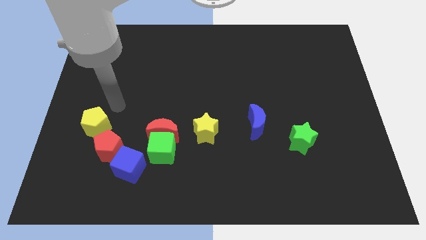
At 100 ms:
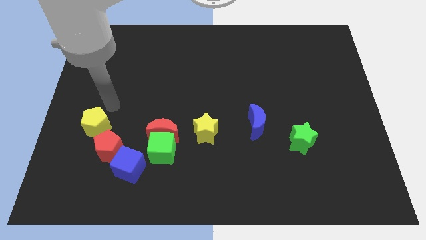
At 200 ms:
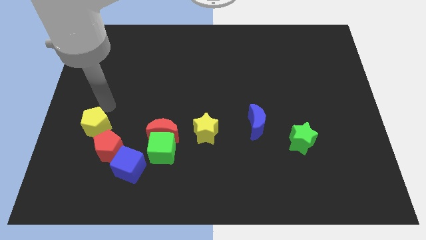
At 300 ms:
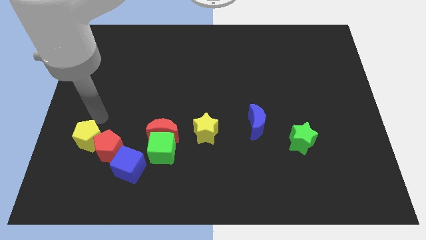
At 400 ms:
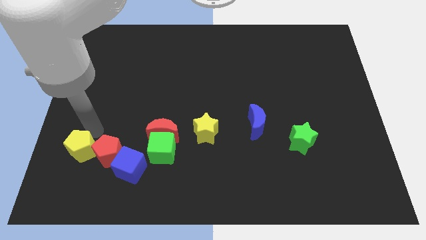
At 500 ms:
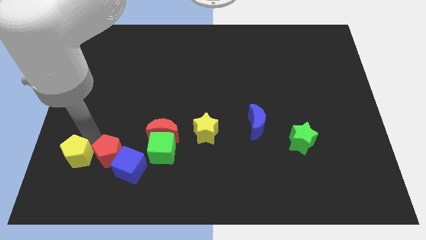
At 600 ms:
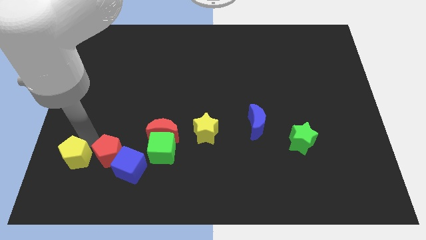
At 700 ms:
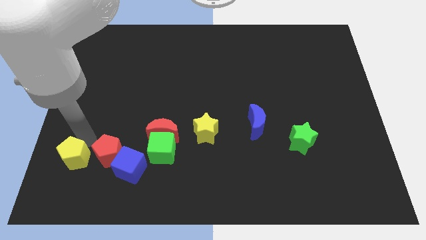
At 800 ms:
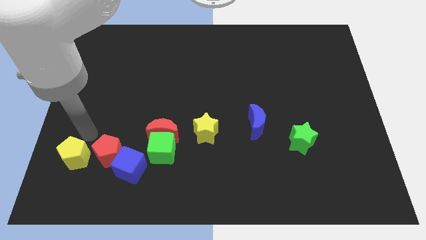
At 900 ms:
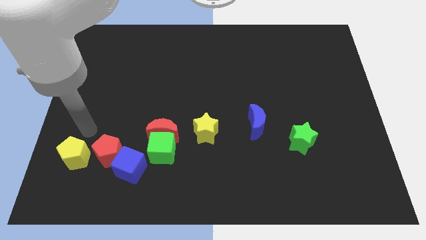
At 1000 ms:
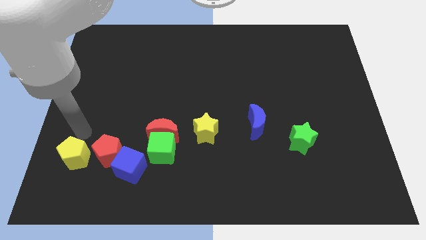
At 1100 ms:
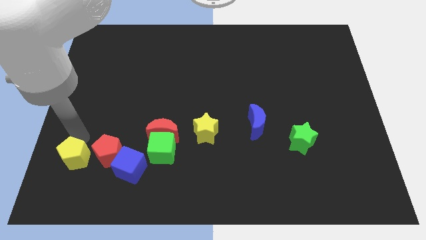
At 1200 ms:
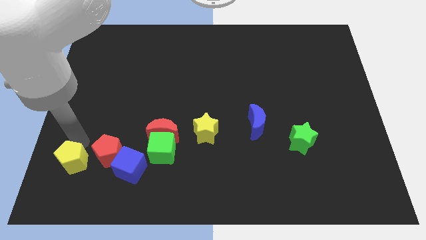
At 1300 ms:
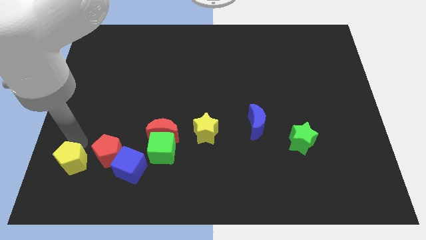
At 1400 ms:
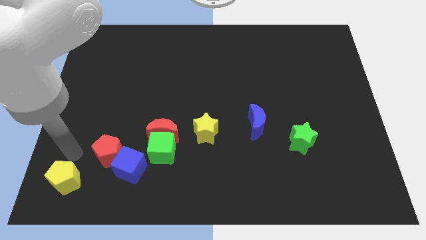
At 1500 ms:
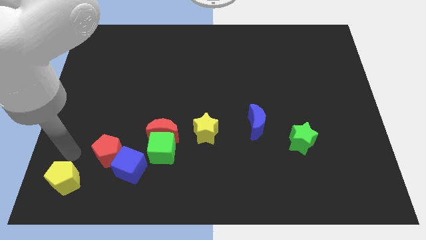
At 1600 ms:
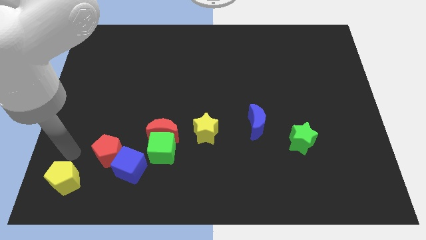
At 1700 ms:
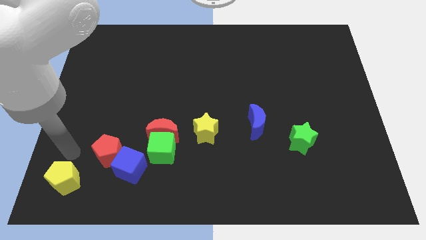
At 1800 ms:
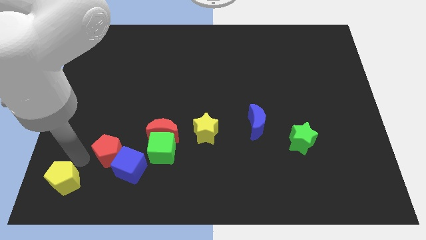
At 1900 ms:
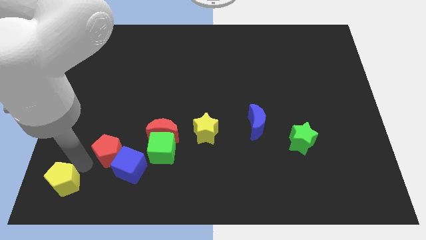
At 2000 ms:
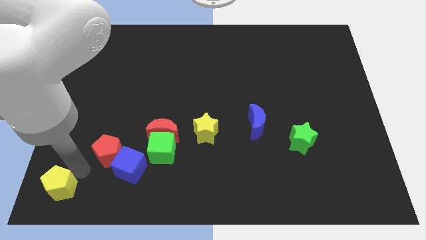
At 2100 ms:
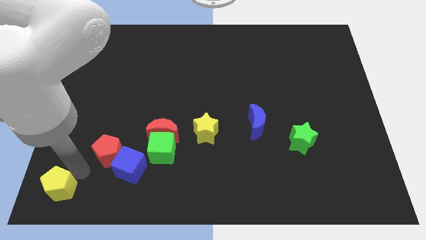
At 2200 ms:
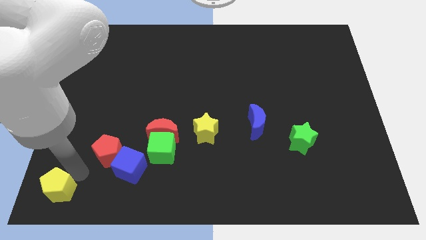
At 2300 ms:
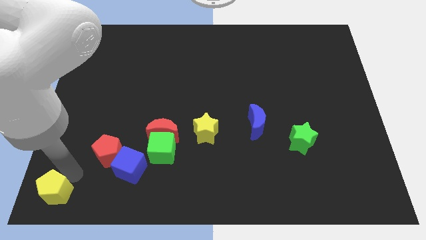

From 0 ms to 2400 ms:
move the yellow pentagon towards the bottom left

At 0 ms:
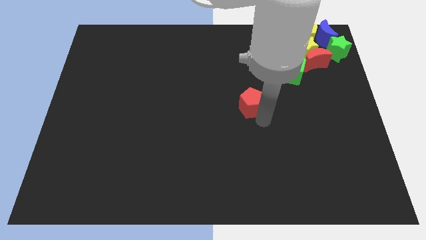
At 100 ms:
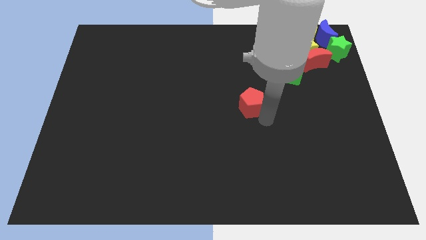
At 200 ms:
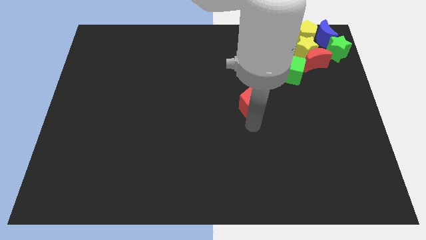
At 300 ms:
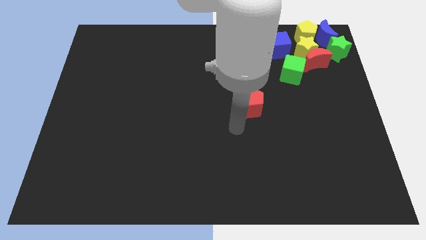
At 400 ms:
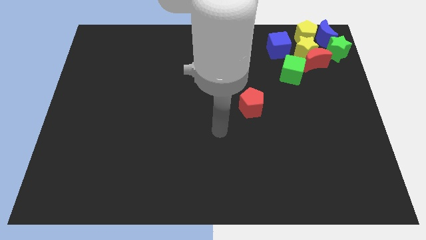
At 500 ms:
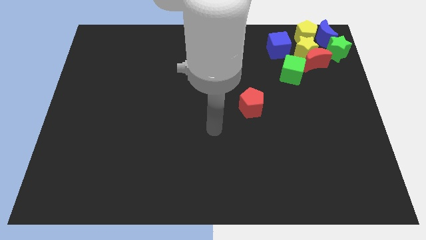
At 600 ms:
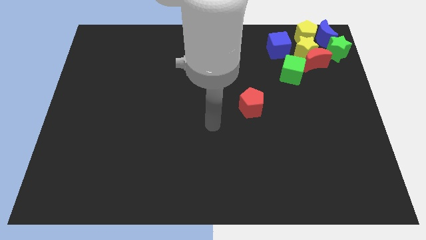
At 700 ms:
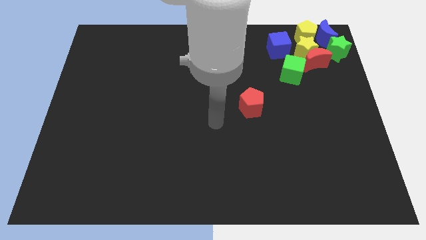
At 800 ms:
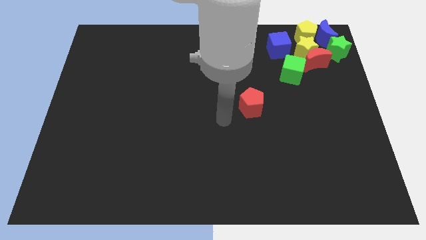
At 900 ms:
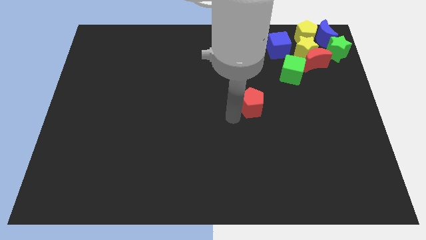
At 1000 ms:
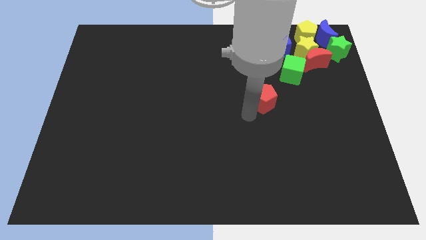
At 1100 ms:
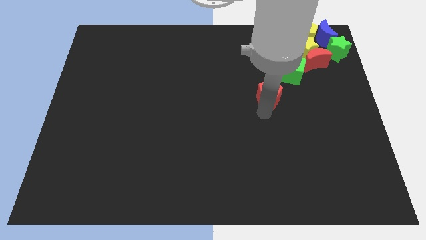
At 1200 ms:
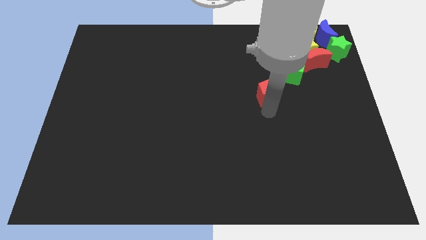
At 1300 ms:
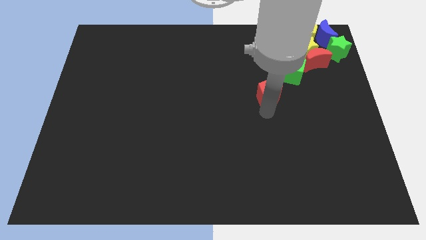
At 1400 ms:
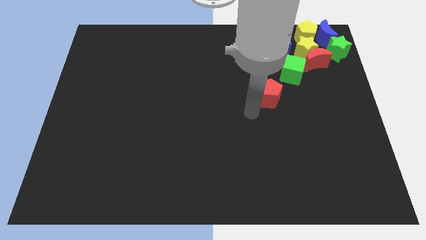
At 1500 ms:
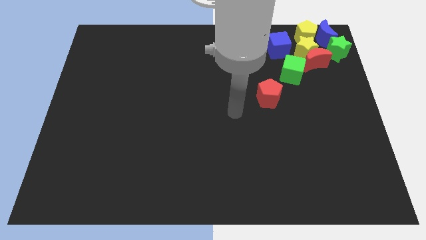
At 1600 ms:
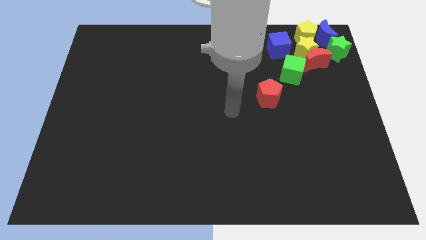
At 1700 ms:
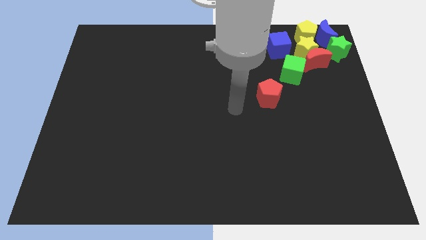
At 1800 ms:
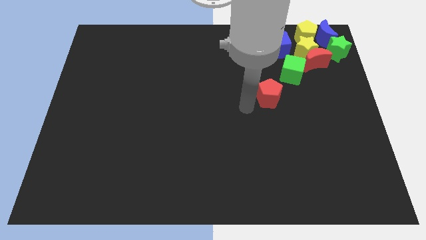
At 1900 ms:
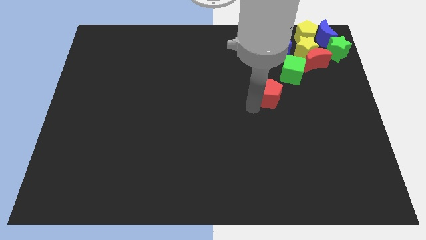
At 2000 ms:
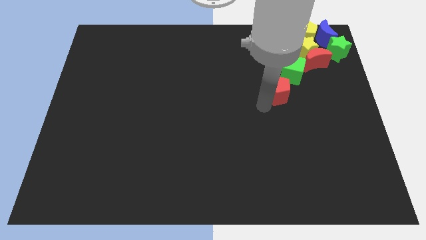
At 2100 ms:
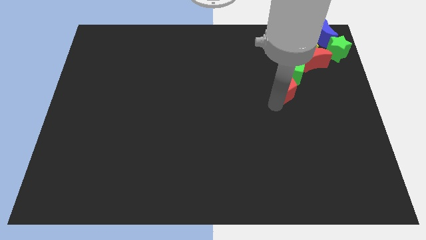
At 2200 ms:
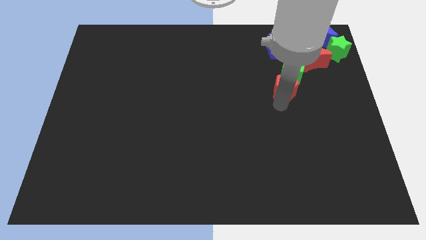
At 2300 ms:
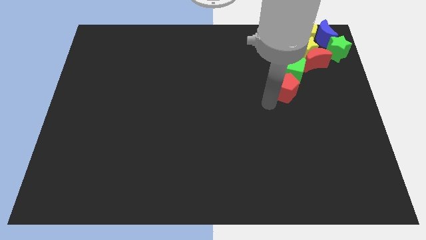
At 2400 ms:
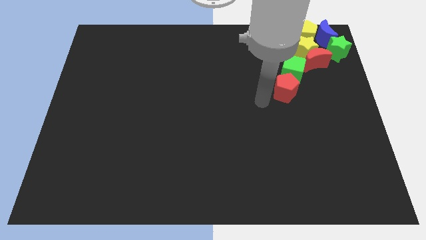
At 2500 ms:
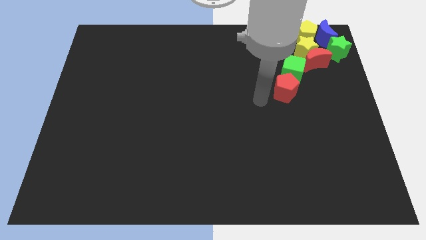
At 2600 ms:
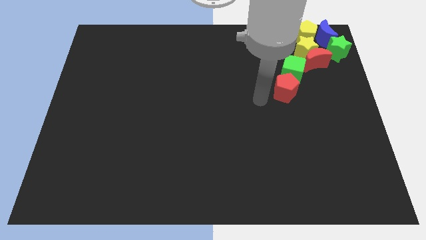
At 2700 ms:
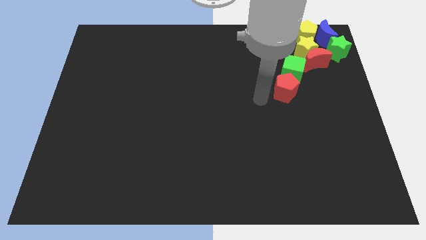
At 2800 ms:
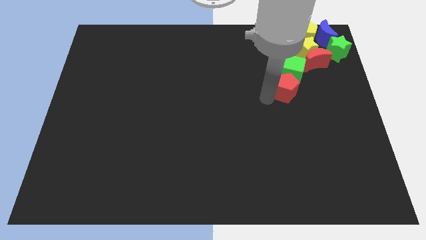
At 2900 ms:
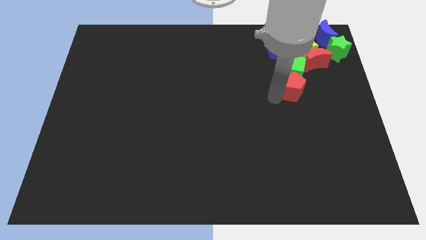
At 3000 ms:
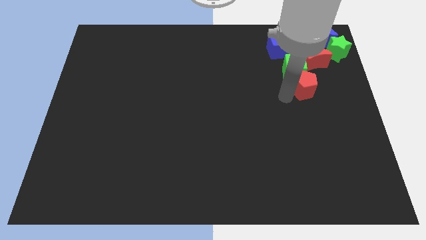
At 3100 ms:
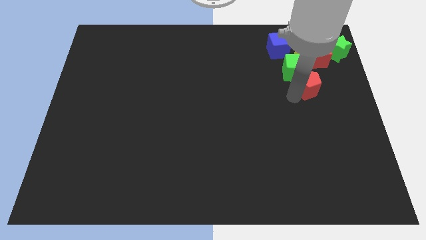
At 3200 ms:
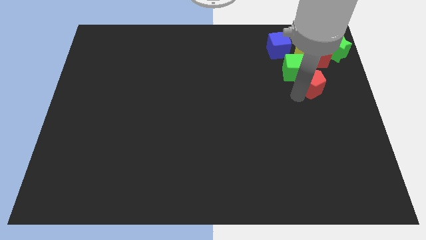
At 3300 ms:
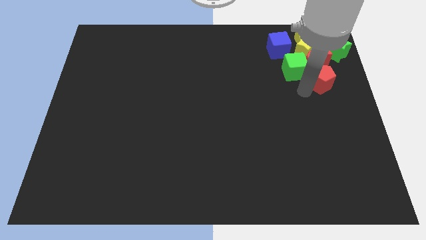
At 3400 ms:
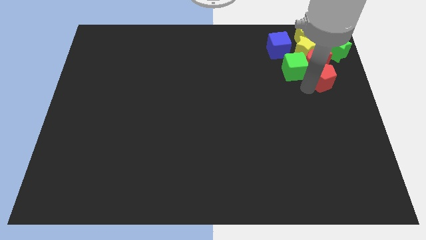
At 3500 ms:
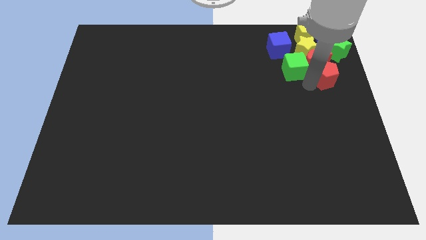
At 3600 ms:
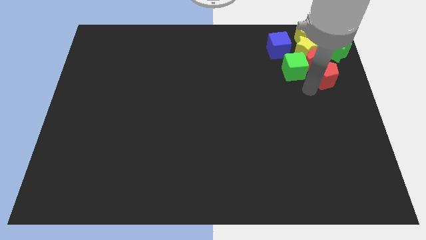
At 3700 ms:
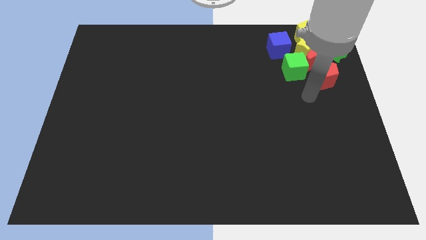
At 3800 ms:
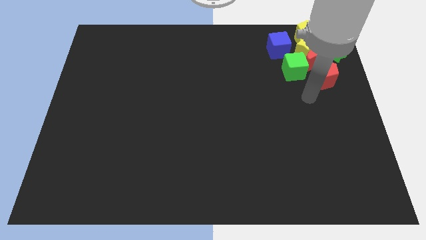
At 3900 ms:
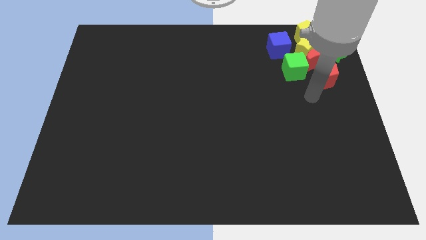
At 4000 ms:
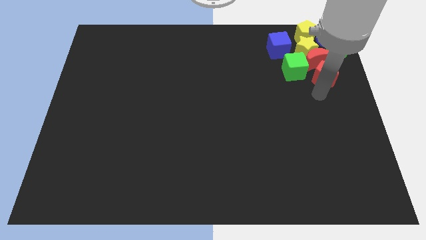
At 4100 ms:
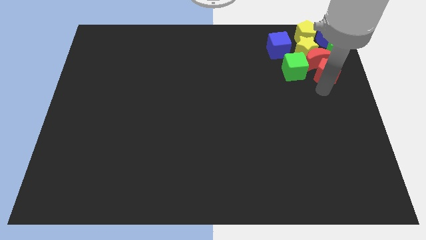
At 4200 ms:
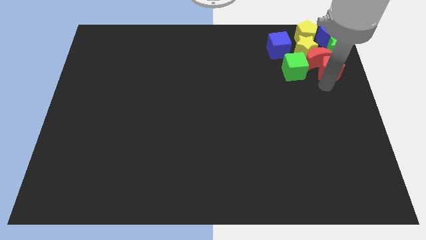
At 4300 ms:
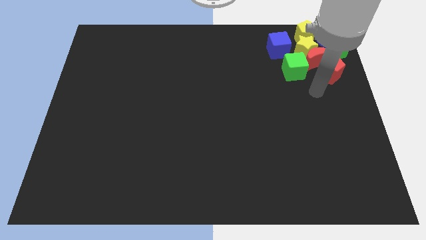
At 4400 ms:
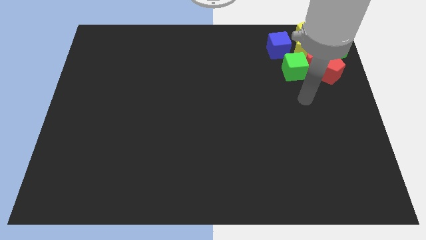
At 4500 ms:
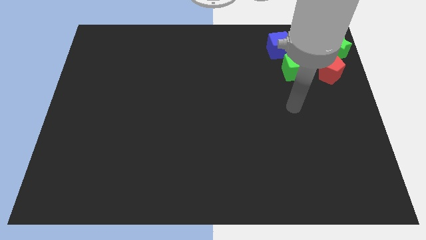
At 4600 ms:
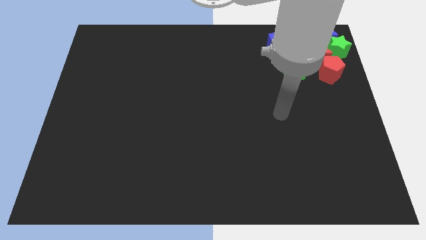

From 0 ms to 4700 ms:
place the red pentagon below the red crescent

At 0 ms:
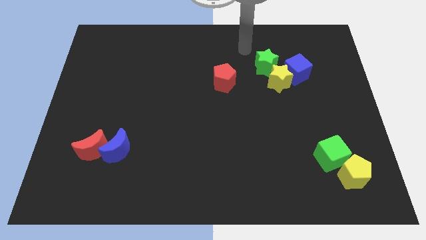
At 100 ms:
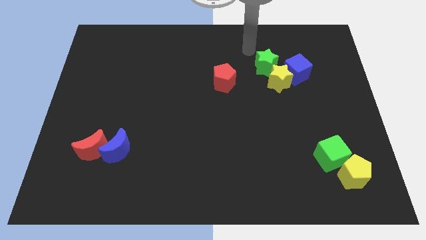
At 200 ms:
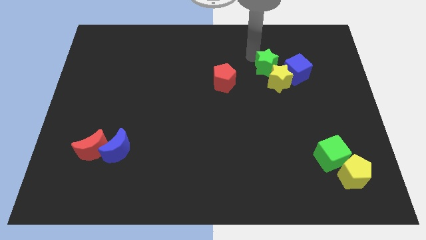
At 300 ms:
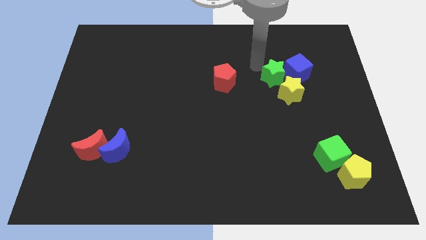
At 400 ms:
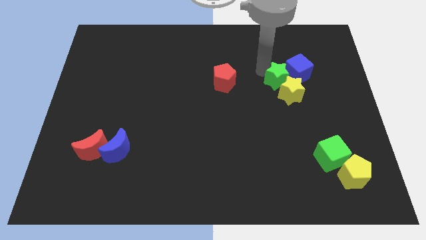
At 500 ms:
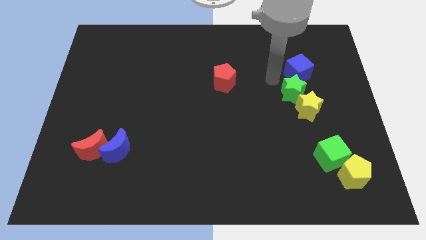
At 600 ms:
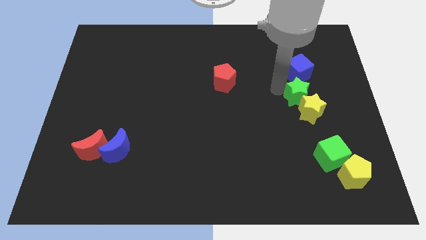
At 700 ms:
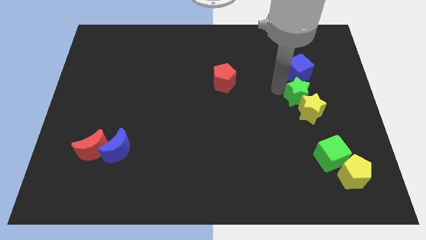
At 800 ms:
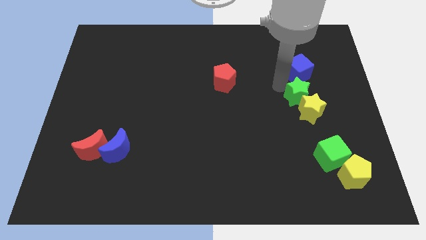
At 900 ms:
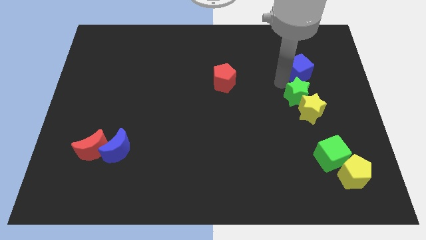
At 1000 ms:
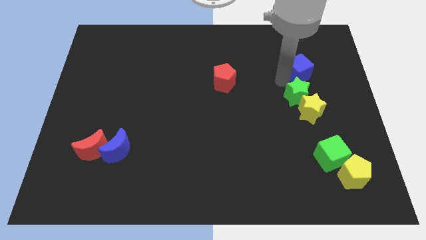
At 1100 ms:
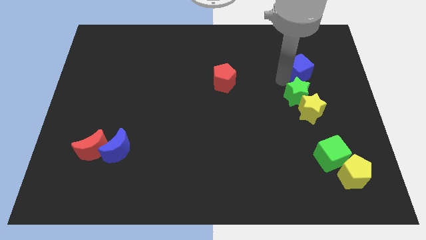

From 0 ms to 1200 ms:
push the green star towards the right

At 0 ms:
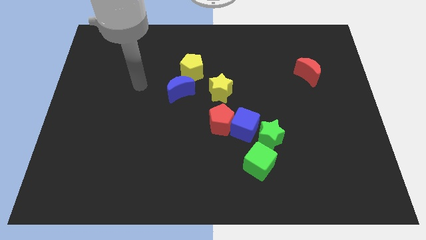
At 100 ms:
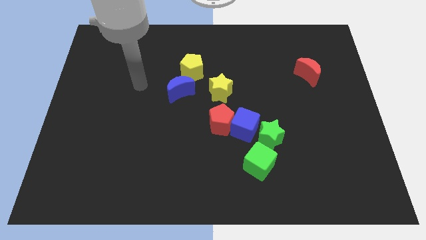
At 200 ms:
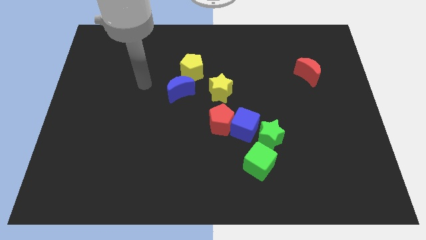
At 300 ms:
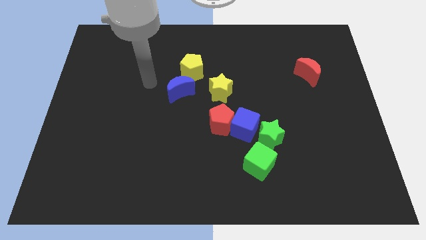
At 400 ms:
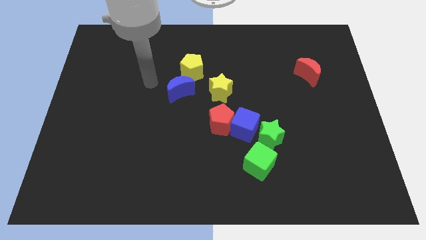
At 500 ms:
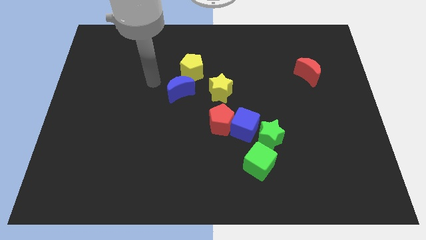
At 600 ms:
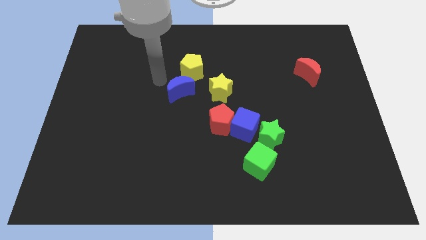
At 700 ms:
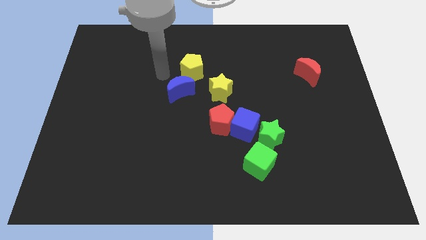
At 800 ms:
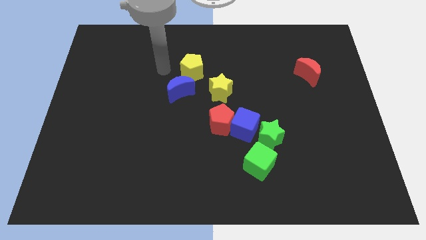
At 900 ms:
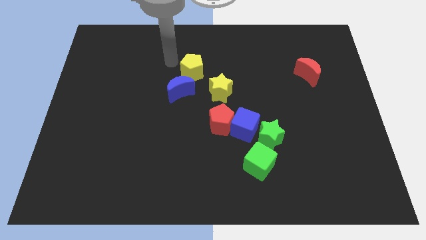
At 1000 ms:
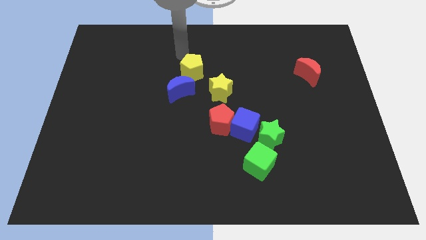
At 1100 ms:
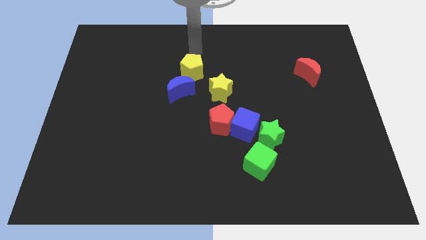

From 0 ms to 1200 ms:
place your hand above the yellow pentagon
